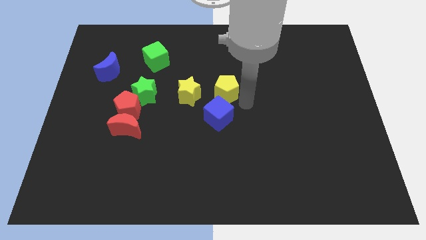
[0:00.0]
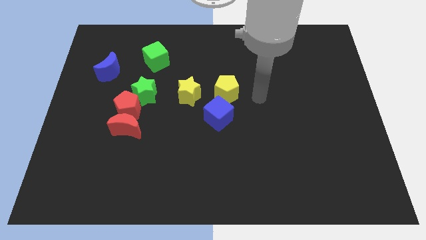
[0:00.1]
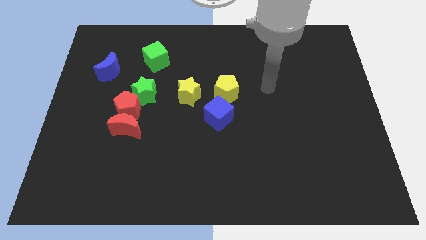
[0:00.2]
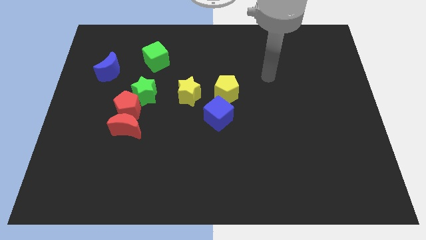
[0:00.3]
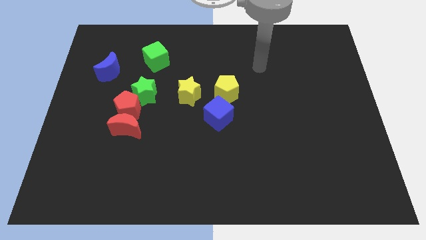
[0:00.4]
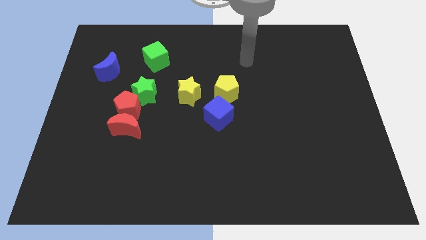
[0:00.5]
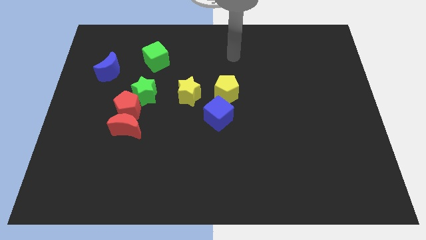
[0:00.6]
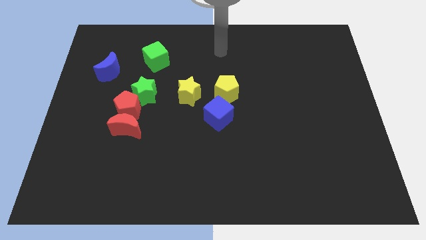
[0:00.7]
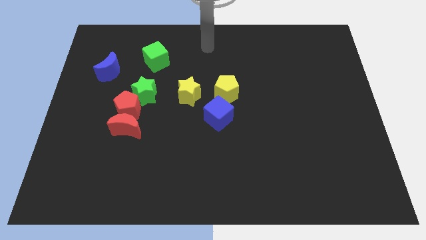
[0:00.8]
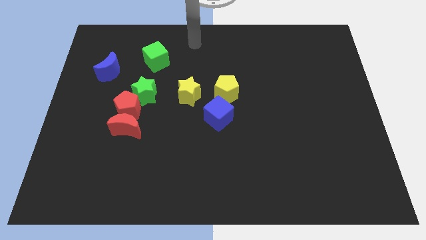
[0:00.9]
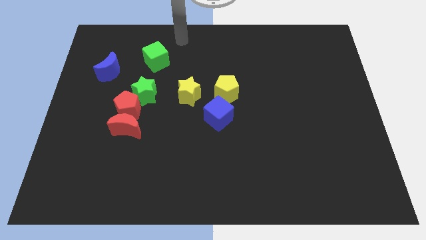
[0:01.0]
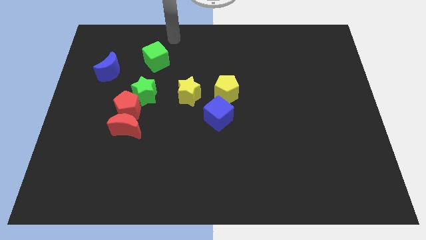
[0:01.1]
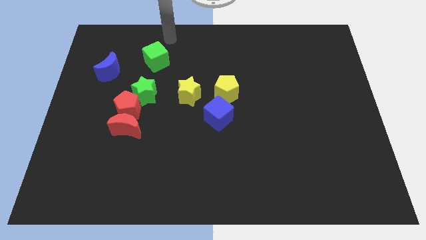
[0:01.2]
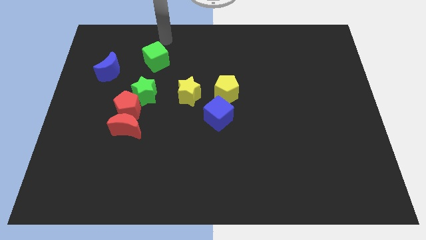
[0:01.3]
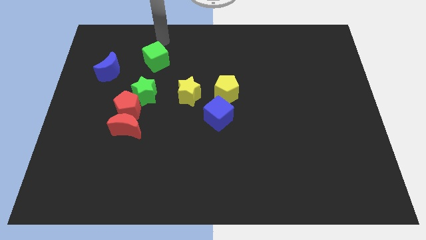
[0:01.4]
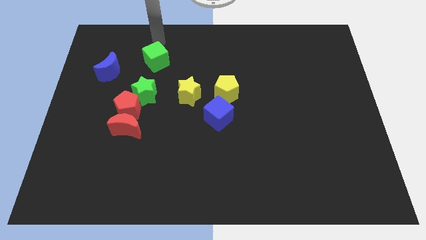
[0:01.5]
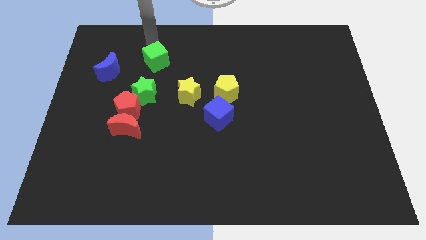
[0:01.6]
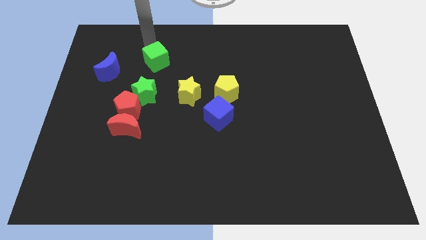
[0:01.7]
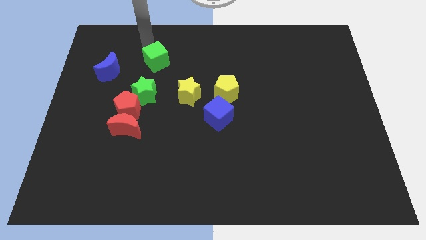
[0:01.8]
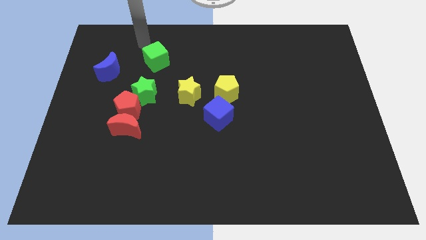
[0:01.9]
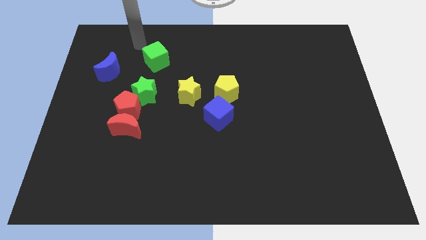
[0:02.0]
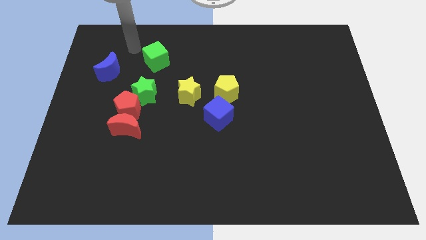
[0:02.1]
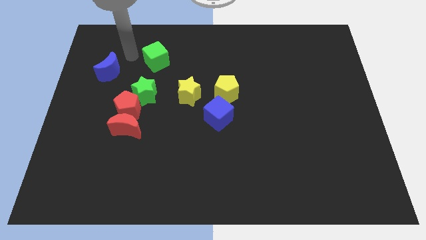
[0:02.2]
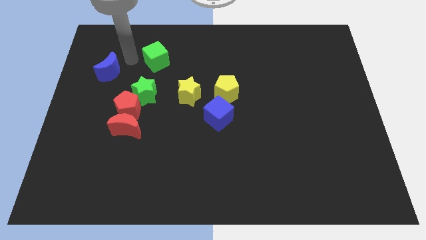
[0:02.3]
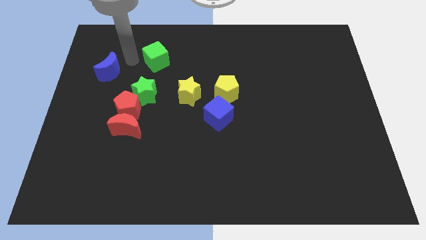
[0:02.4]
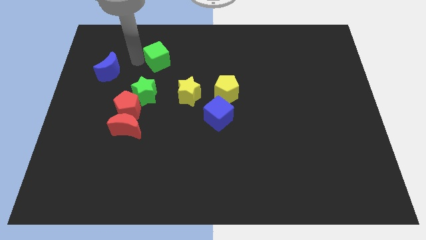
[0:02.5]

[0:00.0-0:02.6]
place your arm at the top left side of green cube

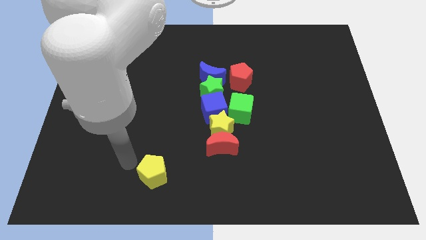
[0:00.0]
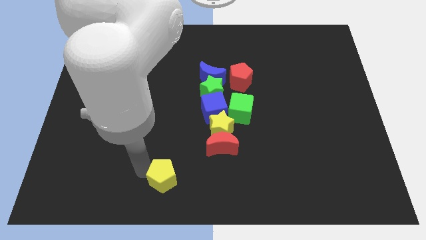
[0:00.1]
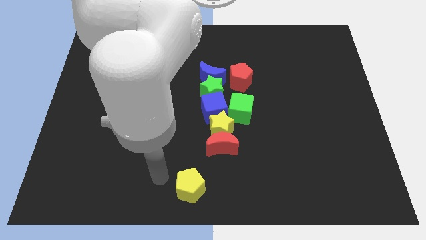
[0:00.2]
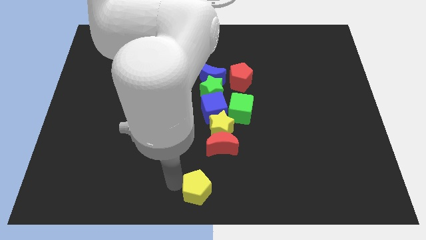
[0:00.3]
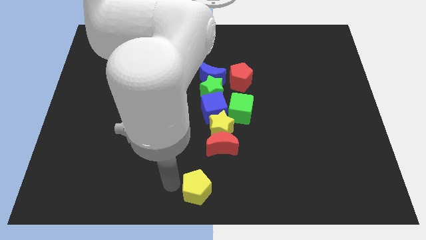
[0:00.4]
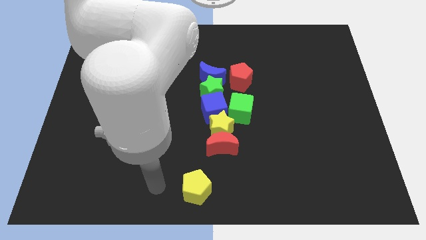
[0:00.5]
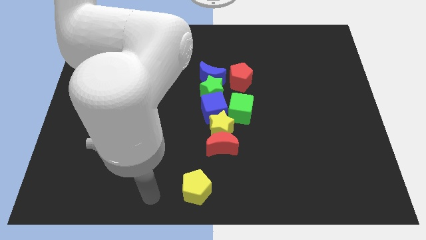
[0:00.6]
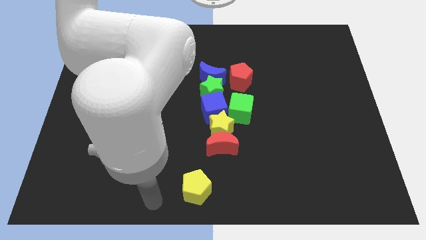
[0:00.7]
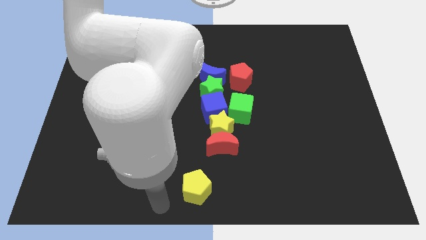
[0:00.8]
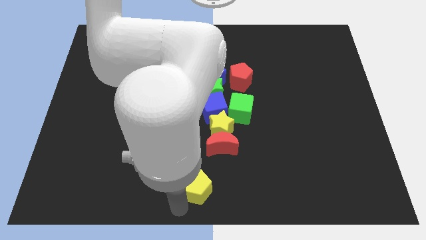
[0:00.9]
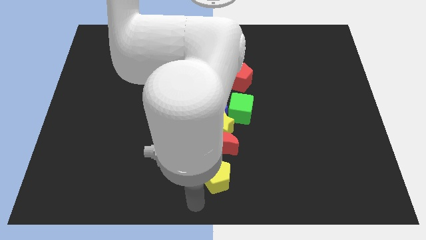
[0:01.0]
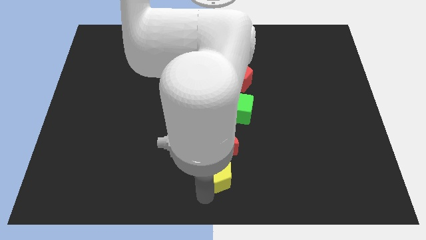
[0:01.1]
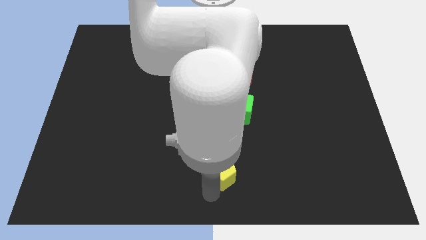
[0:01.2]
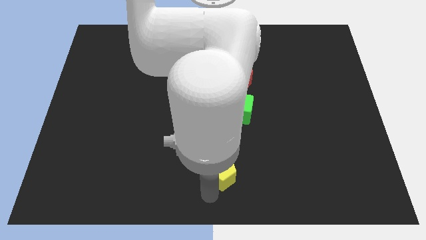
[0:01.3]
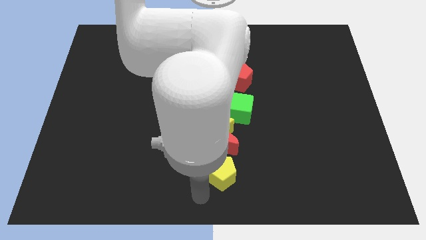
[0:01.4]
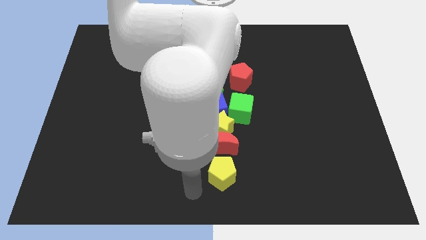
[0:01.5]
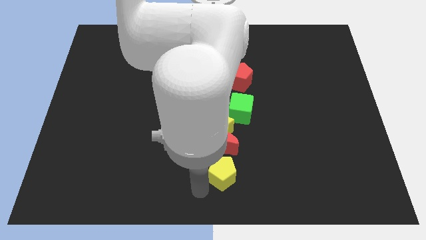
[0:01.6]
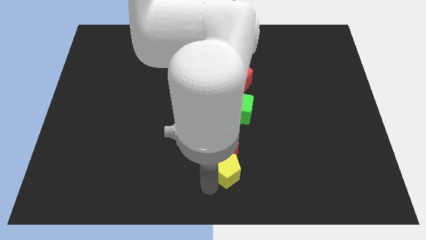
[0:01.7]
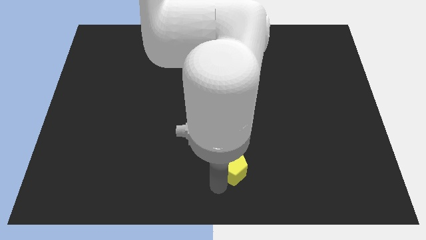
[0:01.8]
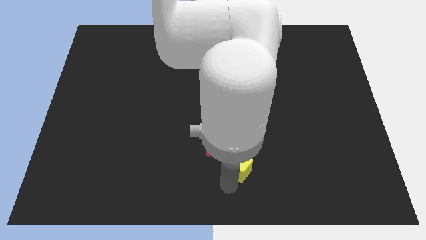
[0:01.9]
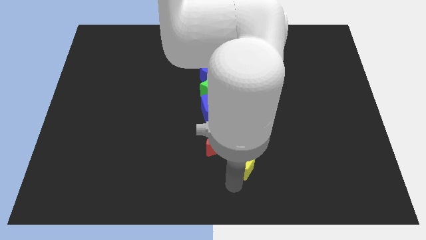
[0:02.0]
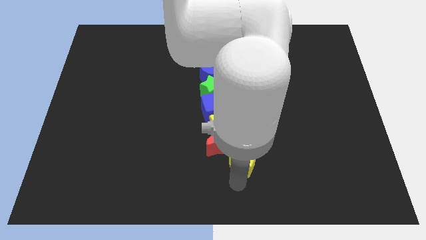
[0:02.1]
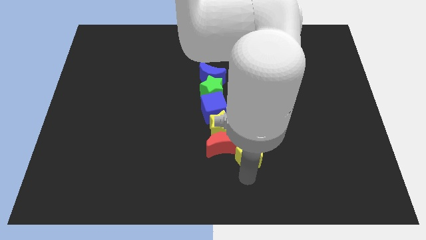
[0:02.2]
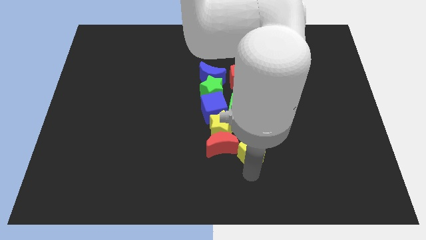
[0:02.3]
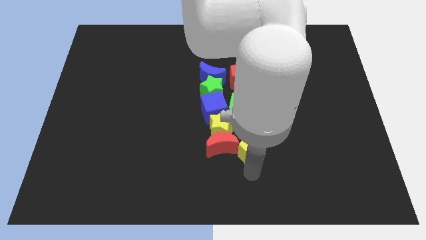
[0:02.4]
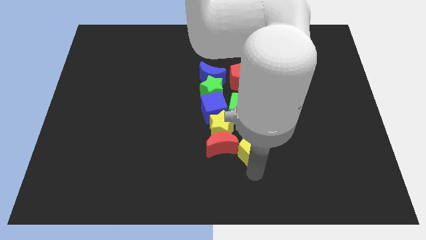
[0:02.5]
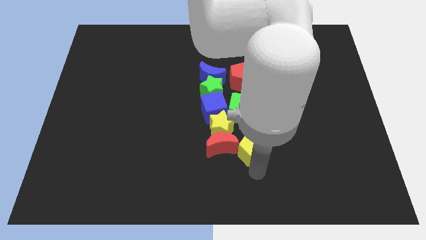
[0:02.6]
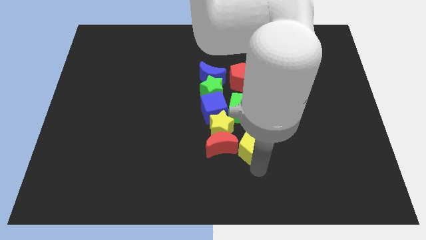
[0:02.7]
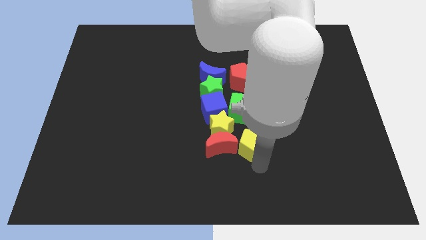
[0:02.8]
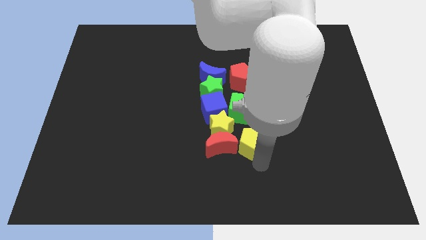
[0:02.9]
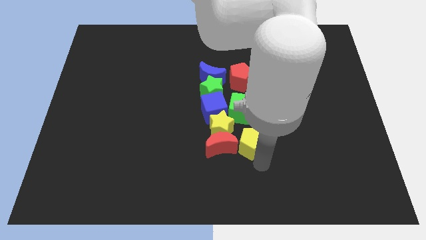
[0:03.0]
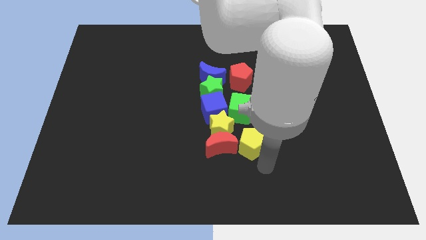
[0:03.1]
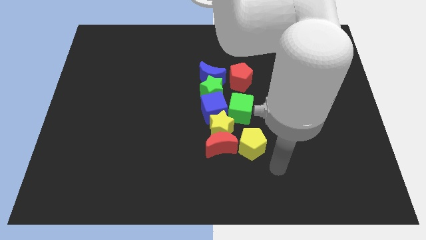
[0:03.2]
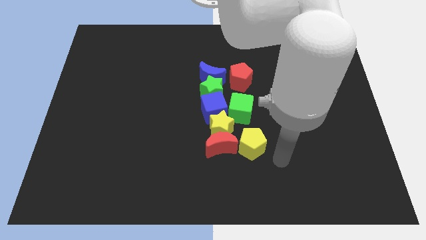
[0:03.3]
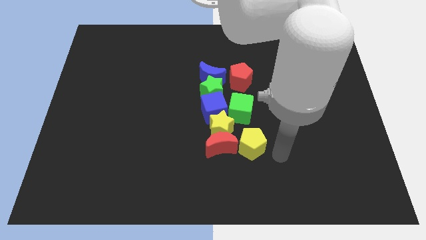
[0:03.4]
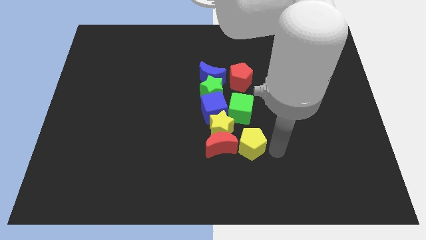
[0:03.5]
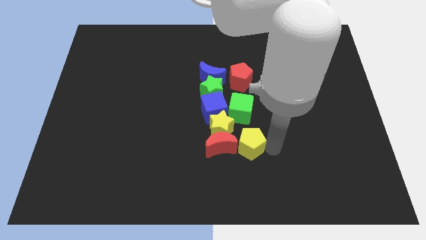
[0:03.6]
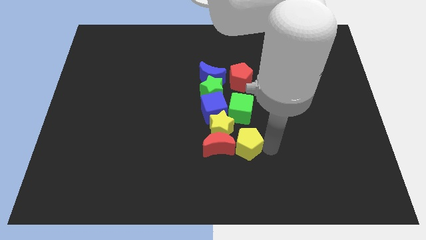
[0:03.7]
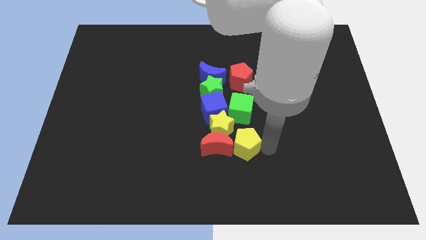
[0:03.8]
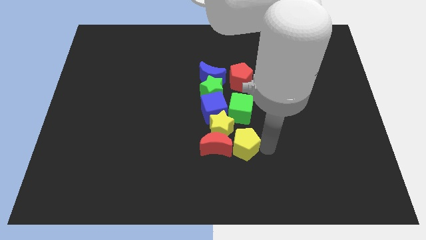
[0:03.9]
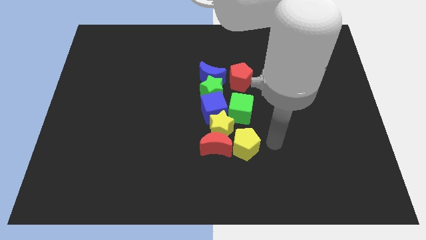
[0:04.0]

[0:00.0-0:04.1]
push the yellow pentagon into the right of the red crescent

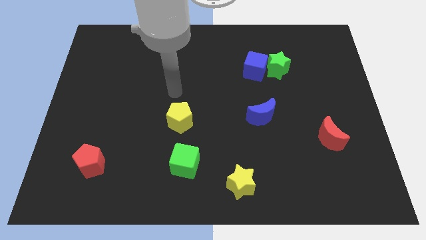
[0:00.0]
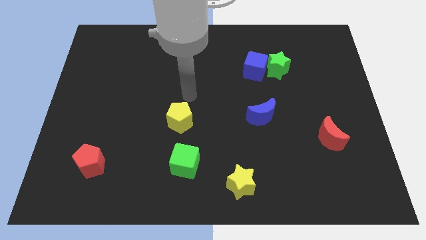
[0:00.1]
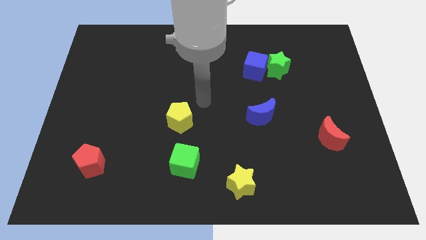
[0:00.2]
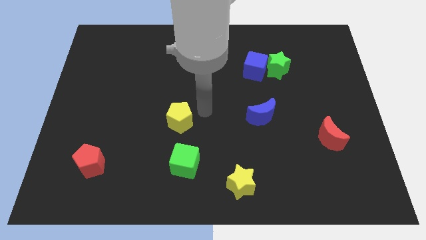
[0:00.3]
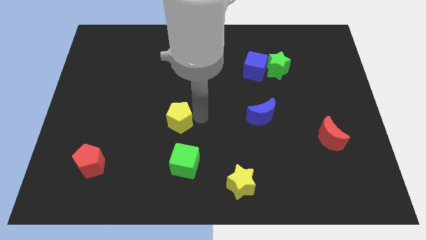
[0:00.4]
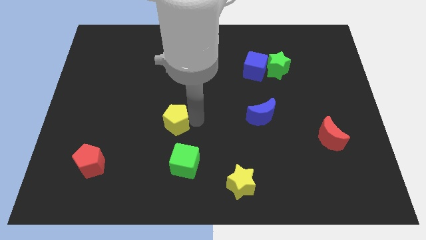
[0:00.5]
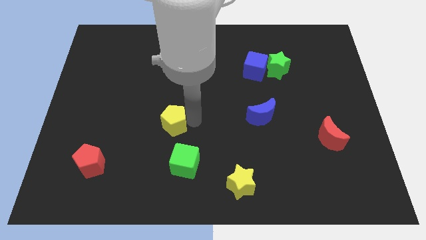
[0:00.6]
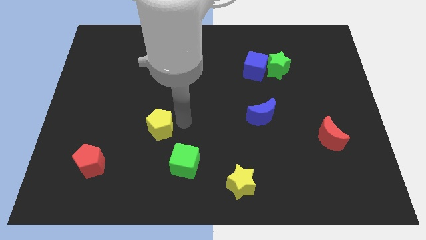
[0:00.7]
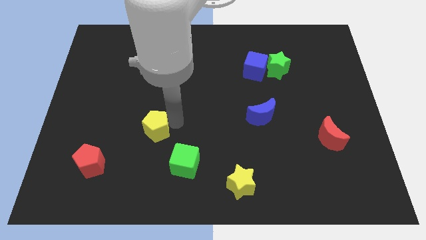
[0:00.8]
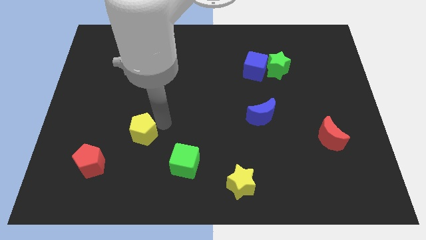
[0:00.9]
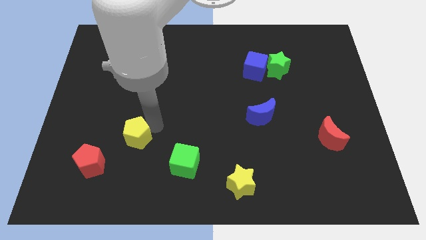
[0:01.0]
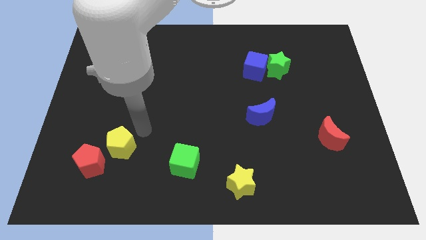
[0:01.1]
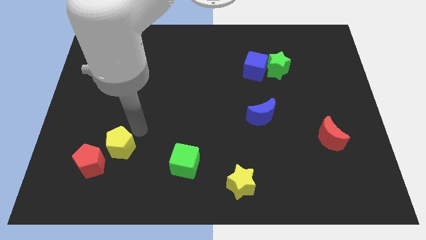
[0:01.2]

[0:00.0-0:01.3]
push the yellow pentagon towards the red pentagon

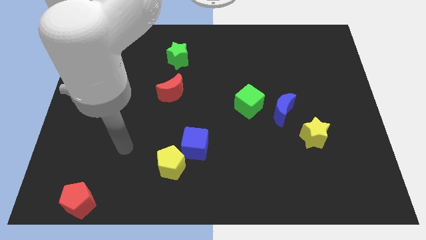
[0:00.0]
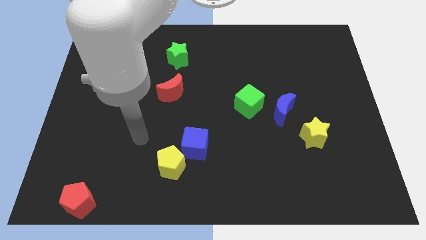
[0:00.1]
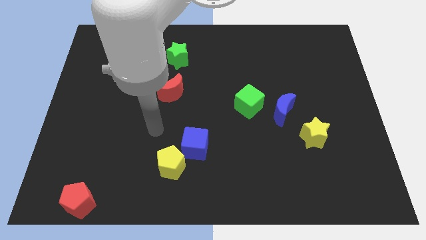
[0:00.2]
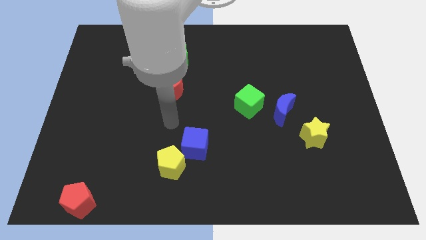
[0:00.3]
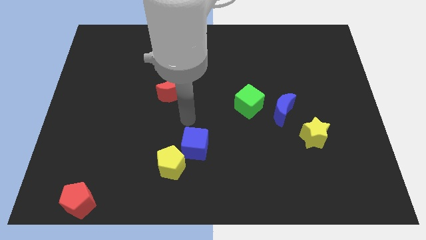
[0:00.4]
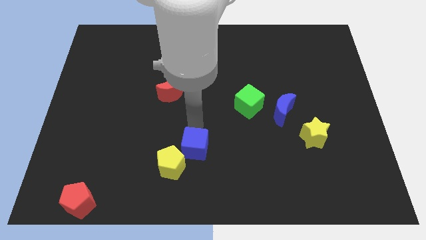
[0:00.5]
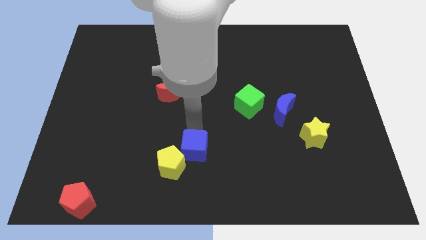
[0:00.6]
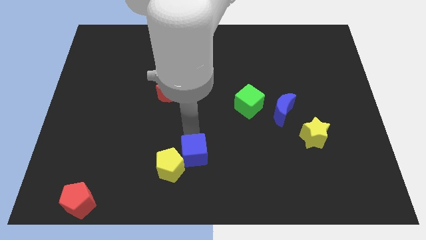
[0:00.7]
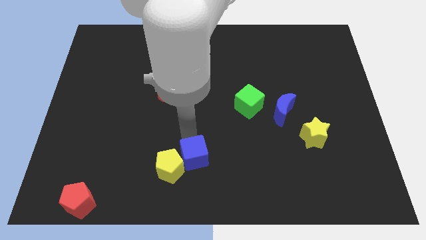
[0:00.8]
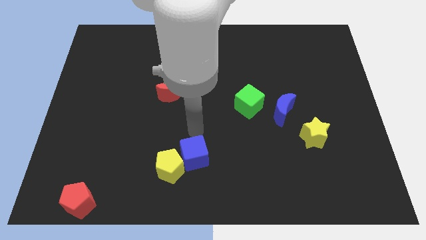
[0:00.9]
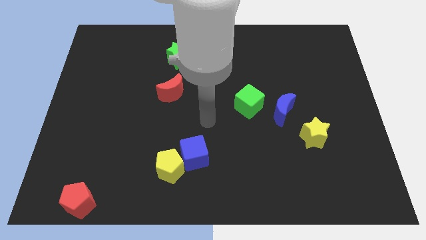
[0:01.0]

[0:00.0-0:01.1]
move yellow pentagon with blue cube slightly downwards
